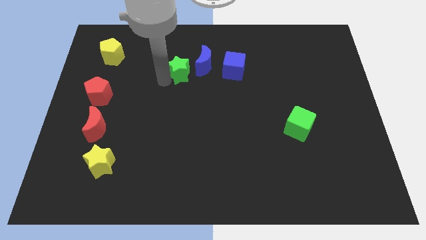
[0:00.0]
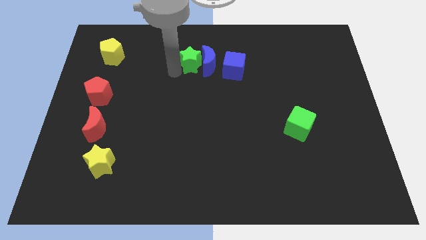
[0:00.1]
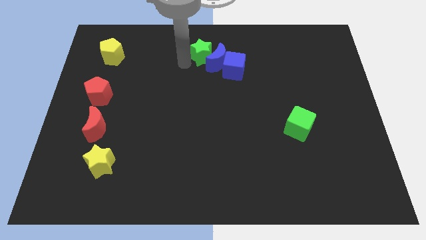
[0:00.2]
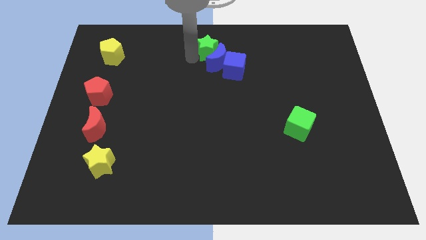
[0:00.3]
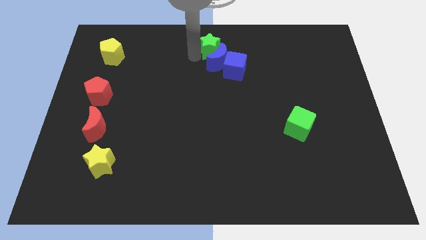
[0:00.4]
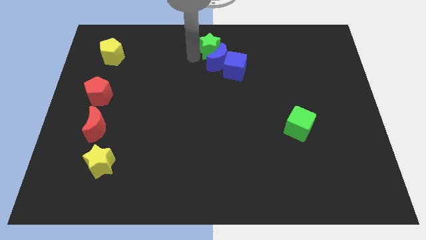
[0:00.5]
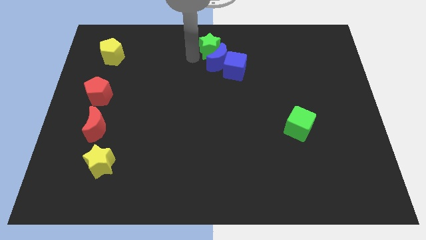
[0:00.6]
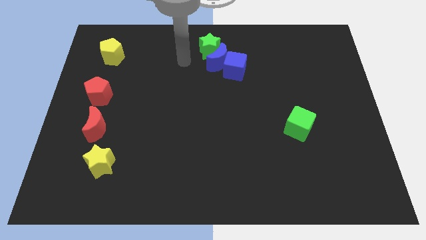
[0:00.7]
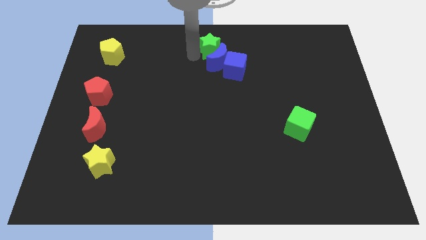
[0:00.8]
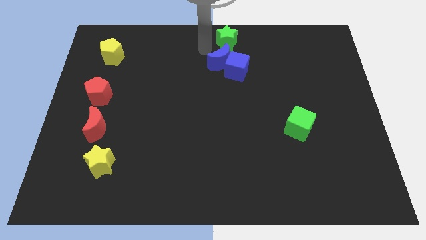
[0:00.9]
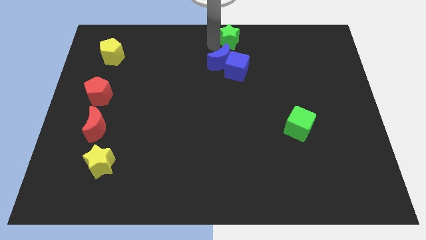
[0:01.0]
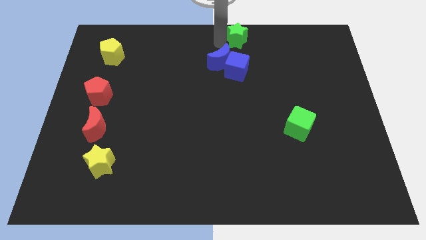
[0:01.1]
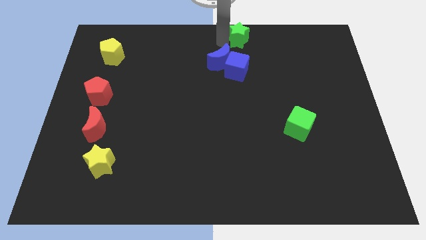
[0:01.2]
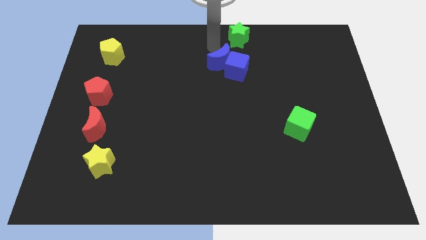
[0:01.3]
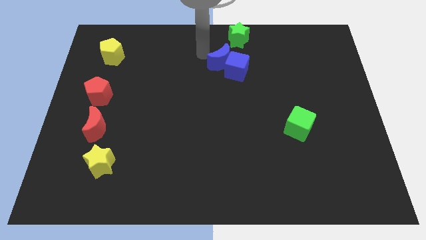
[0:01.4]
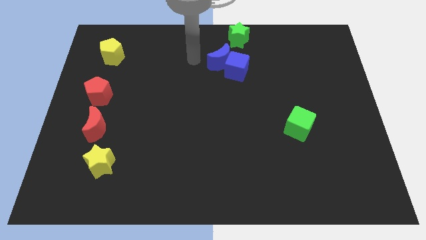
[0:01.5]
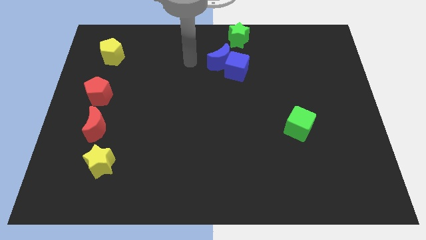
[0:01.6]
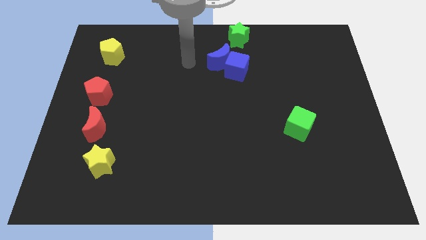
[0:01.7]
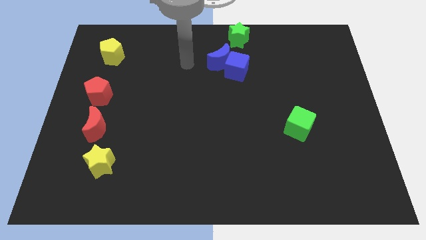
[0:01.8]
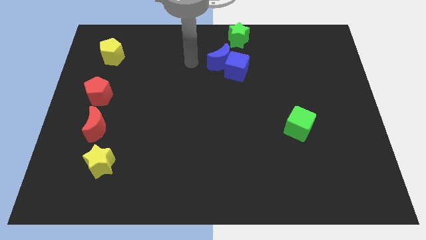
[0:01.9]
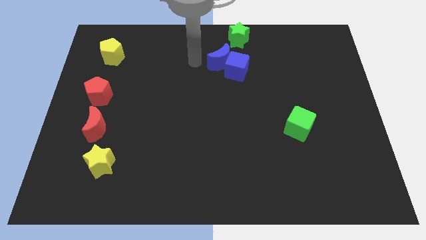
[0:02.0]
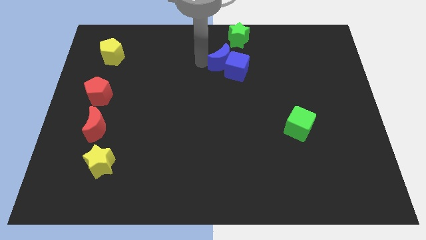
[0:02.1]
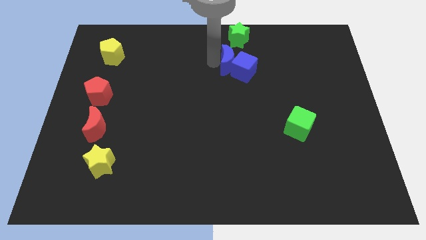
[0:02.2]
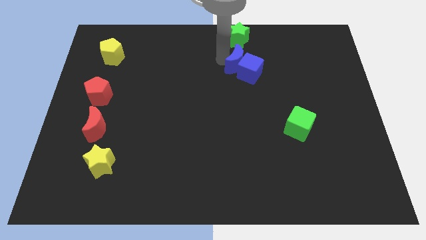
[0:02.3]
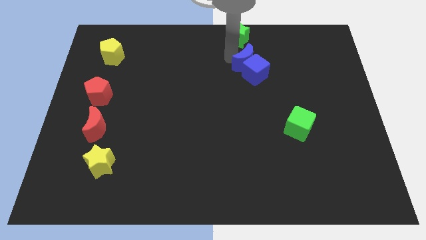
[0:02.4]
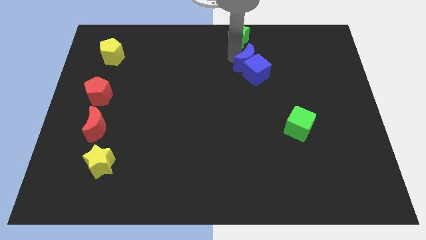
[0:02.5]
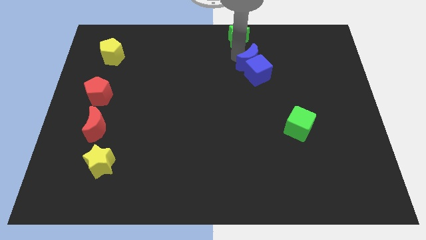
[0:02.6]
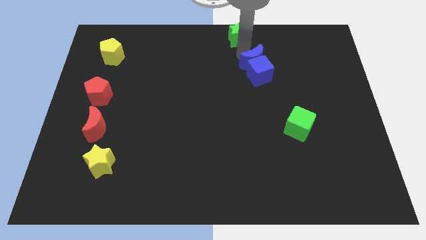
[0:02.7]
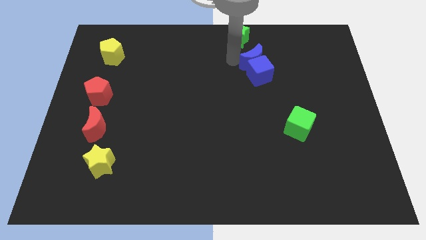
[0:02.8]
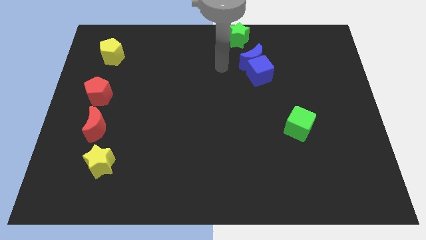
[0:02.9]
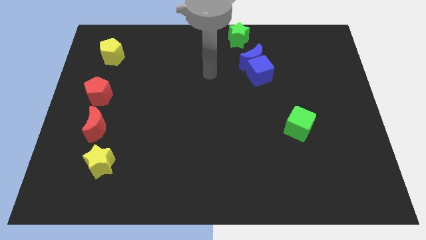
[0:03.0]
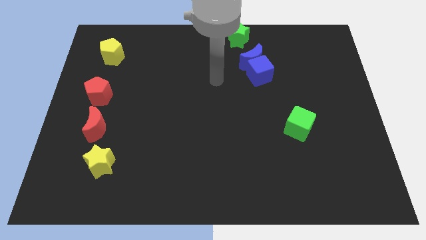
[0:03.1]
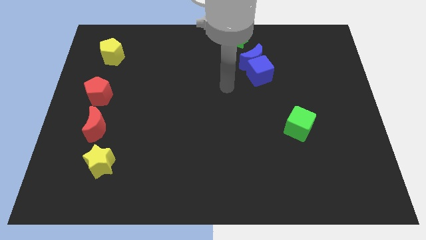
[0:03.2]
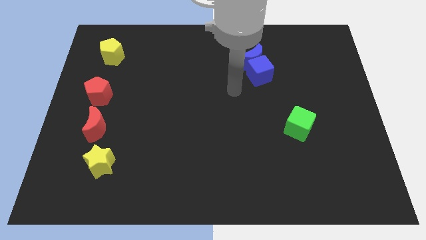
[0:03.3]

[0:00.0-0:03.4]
slightly push the blue block and moon towards the right side

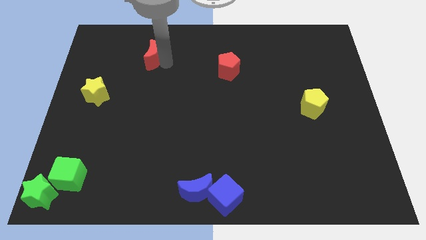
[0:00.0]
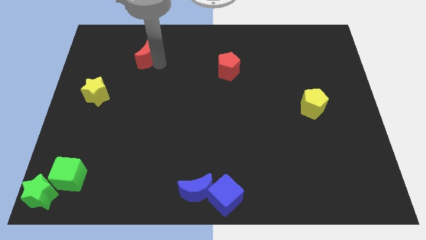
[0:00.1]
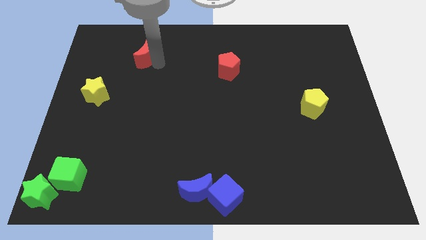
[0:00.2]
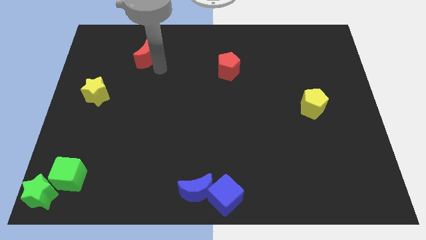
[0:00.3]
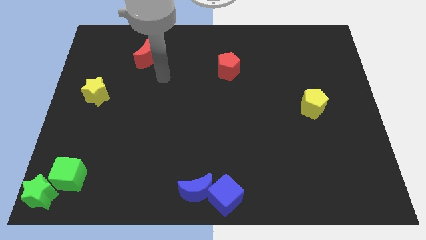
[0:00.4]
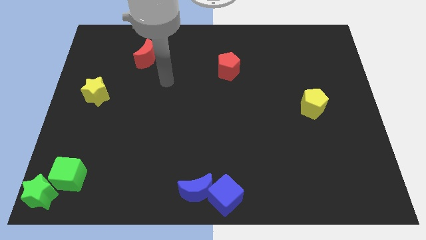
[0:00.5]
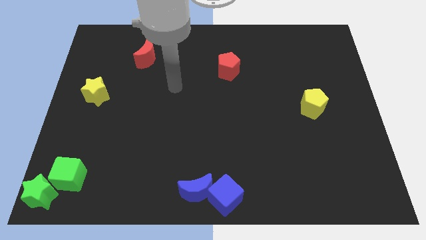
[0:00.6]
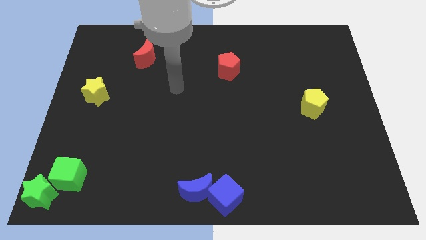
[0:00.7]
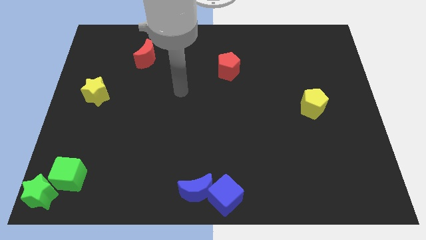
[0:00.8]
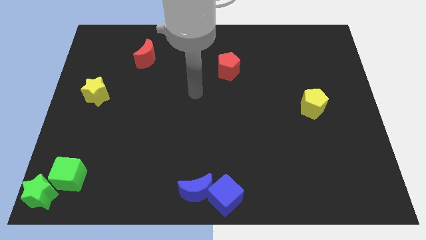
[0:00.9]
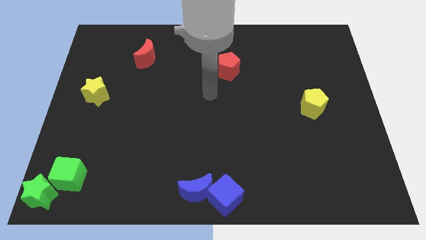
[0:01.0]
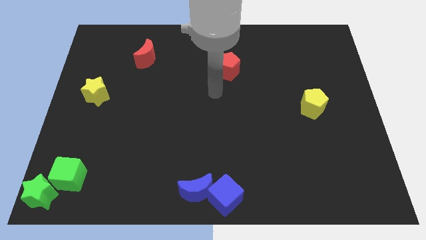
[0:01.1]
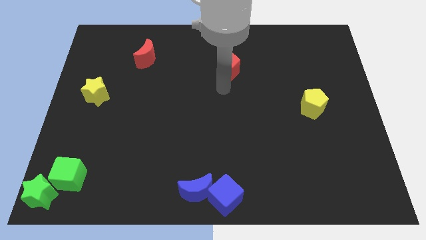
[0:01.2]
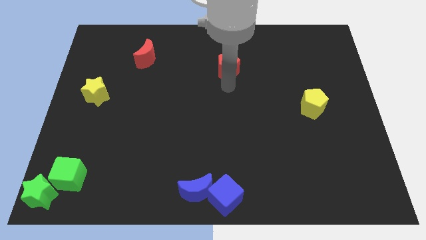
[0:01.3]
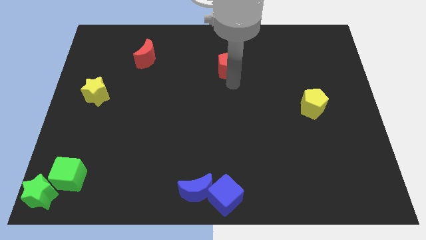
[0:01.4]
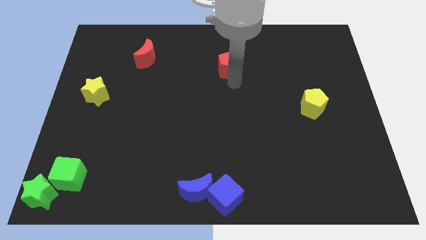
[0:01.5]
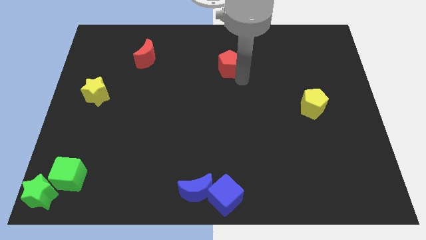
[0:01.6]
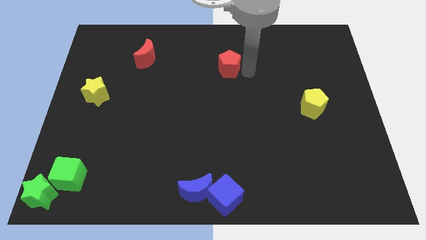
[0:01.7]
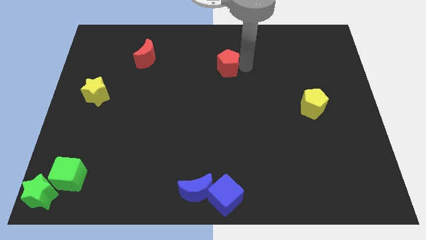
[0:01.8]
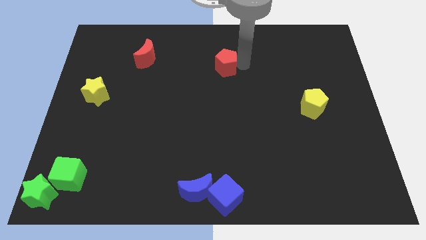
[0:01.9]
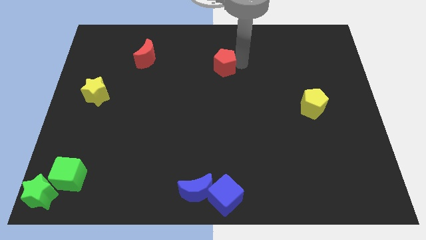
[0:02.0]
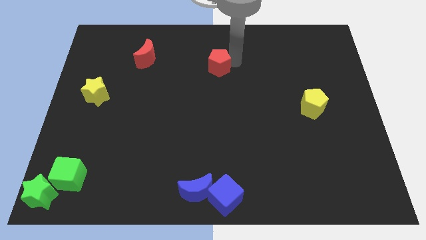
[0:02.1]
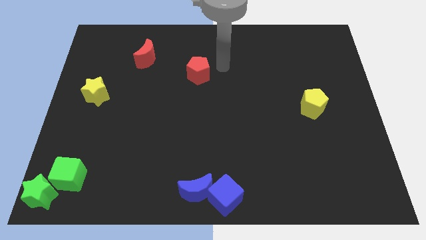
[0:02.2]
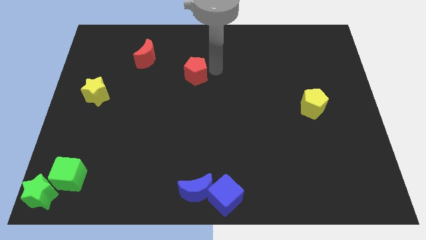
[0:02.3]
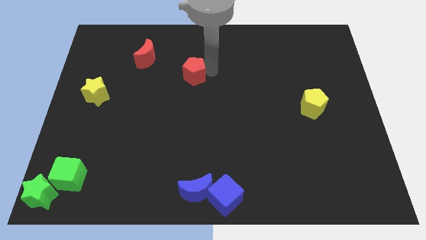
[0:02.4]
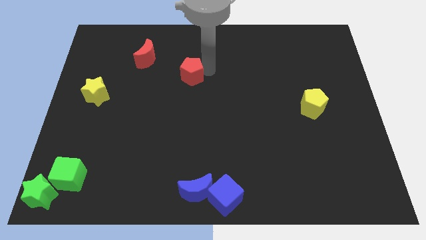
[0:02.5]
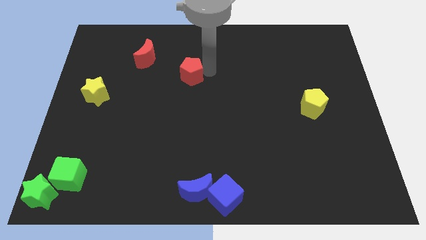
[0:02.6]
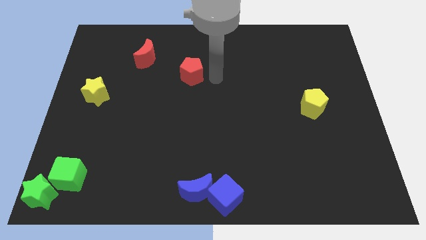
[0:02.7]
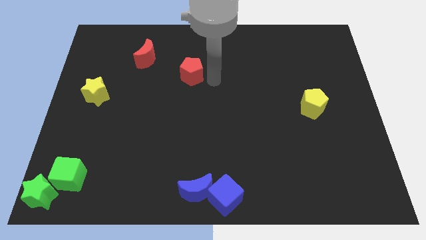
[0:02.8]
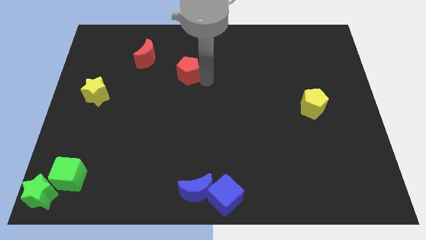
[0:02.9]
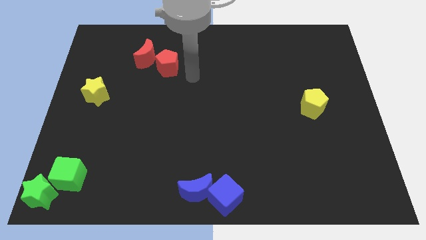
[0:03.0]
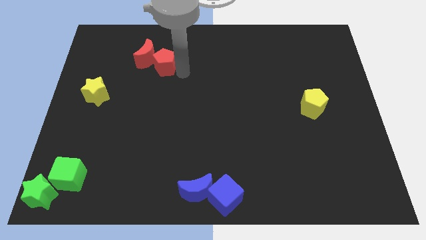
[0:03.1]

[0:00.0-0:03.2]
move the red pentagon diagonal right of the red moon

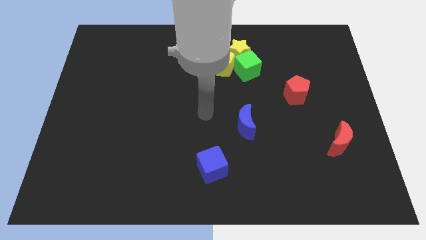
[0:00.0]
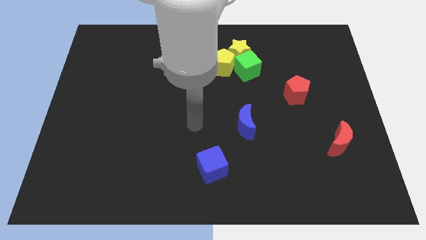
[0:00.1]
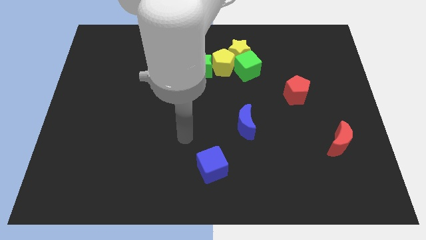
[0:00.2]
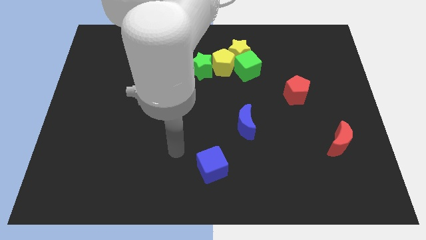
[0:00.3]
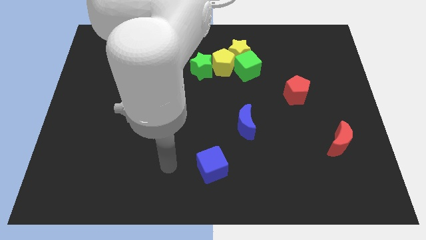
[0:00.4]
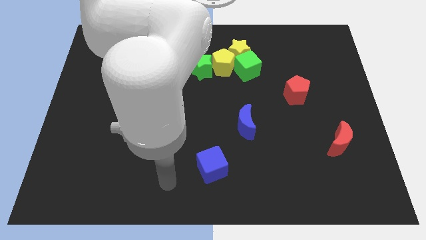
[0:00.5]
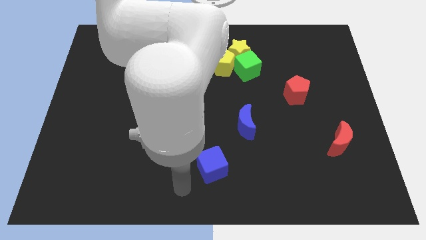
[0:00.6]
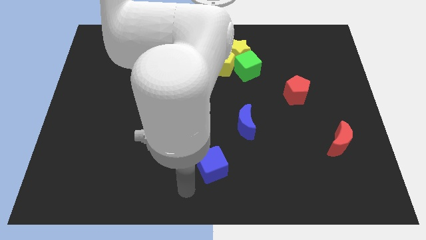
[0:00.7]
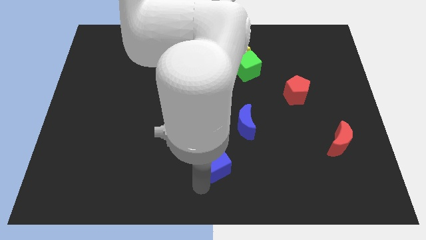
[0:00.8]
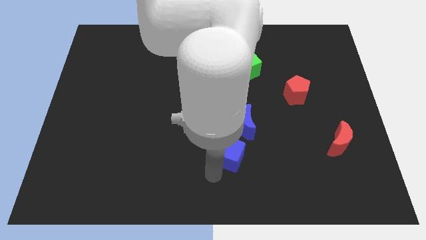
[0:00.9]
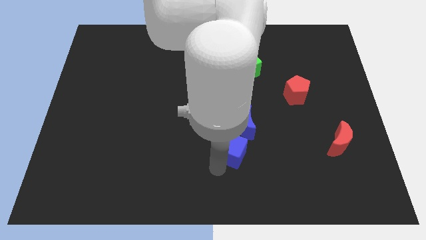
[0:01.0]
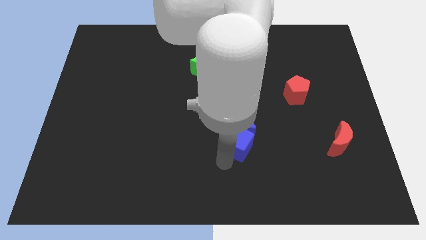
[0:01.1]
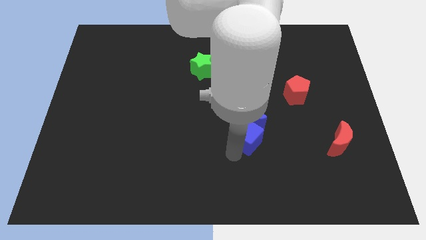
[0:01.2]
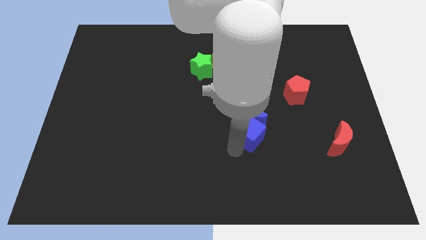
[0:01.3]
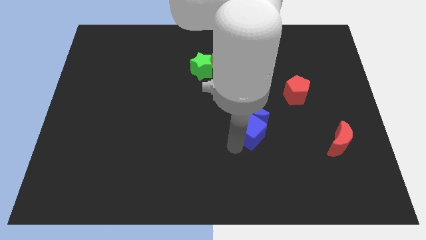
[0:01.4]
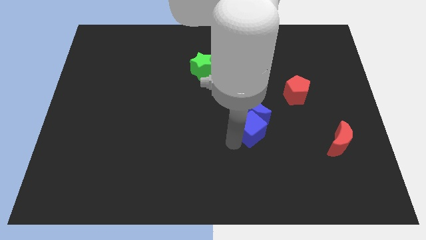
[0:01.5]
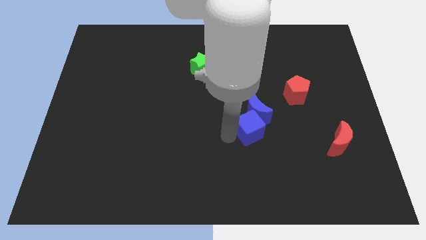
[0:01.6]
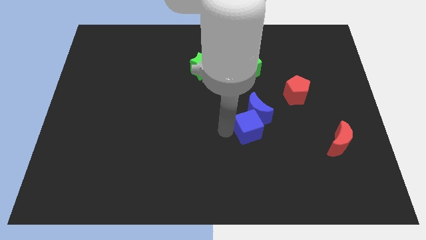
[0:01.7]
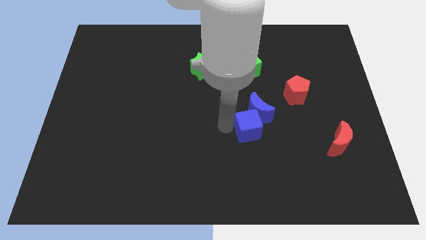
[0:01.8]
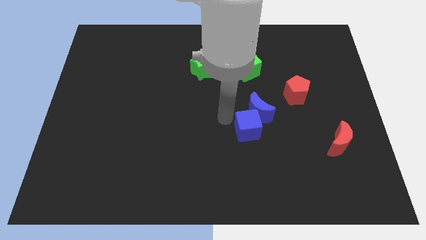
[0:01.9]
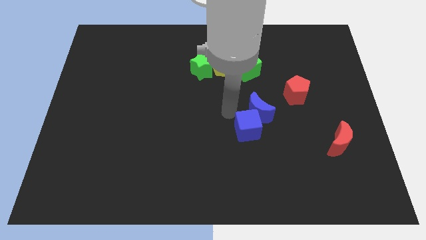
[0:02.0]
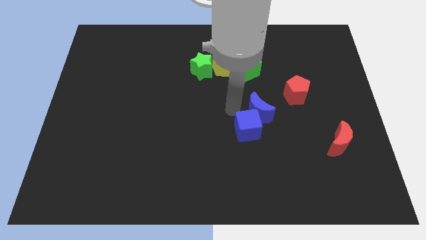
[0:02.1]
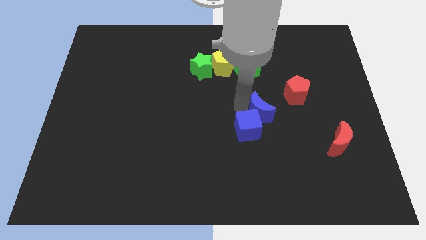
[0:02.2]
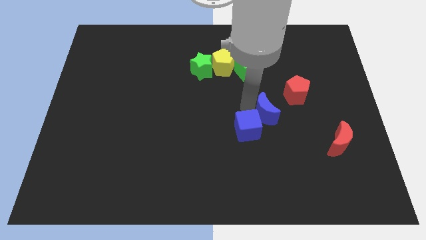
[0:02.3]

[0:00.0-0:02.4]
push blue cube into the blue moon
